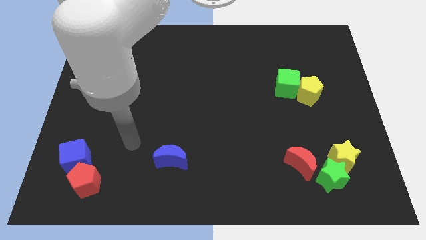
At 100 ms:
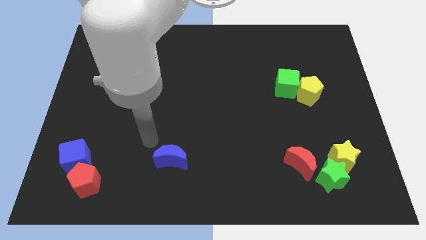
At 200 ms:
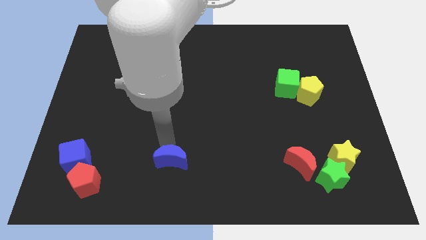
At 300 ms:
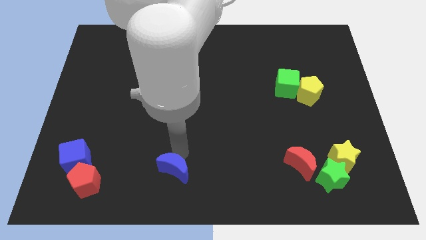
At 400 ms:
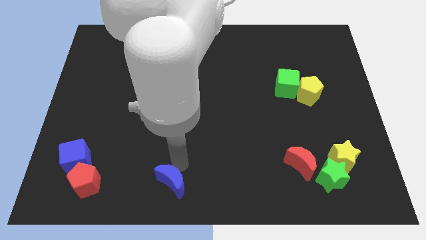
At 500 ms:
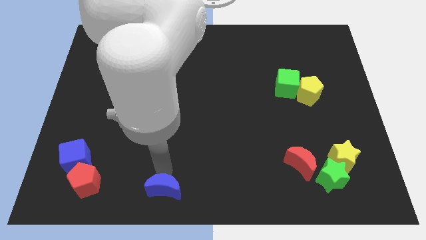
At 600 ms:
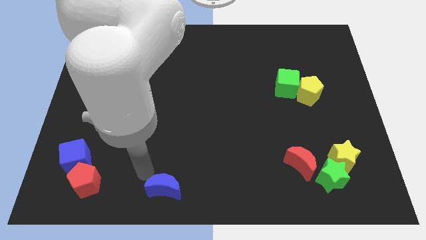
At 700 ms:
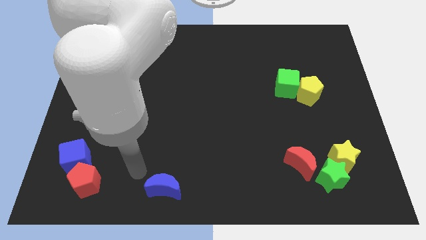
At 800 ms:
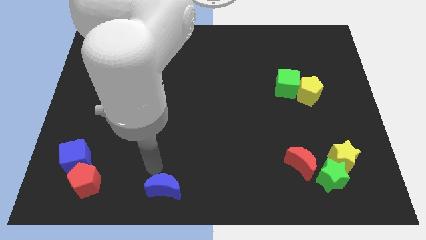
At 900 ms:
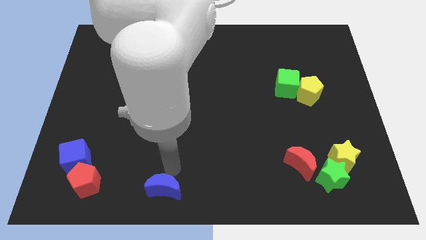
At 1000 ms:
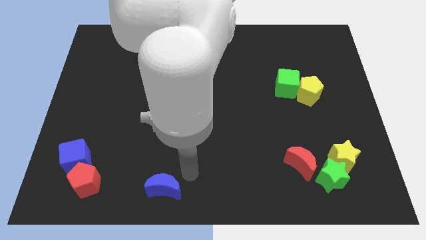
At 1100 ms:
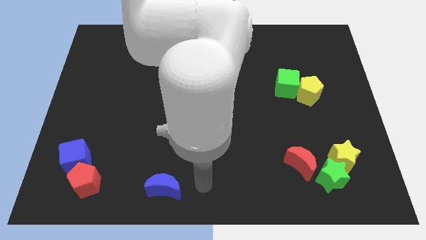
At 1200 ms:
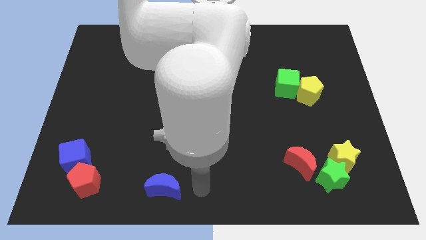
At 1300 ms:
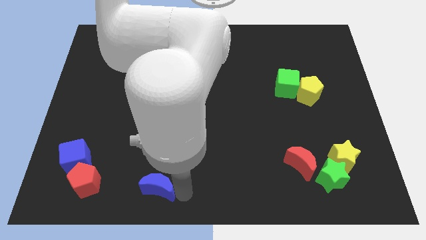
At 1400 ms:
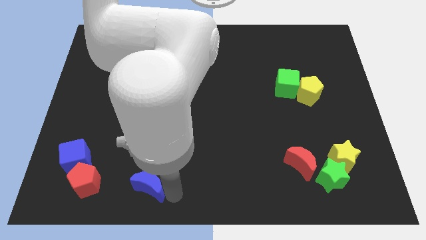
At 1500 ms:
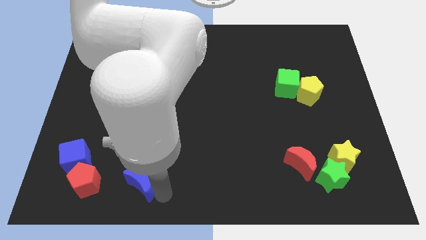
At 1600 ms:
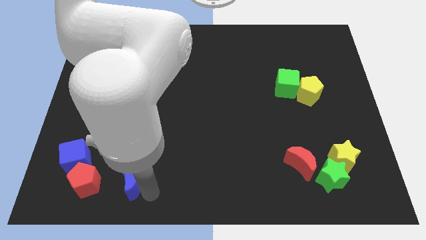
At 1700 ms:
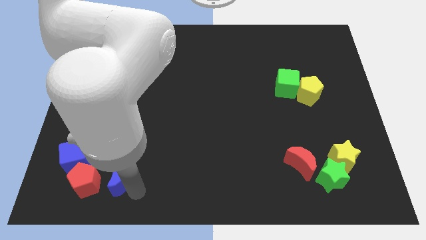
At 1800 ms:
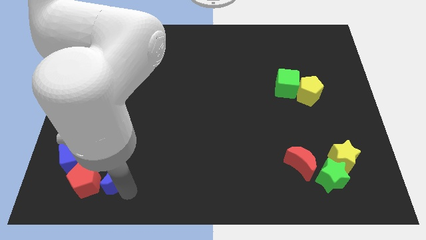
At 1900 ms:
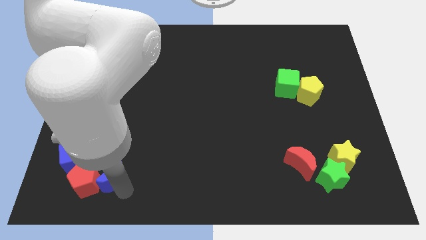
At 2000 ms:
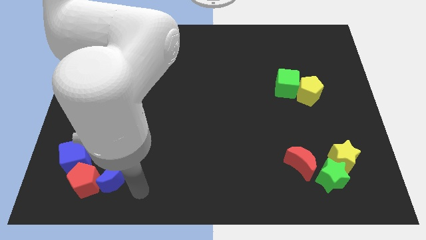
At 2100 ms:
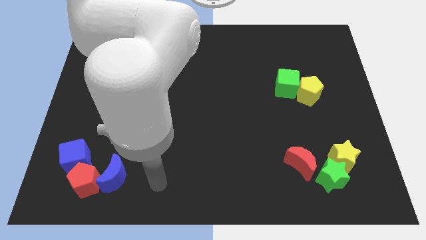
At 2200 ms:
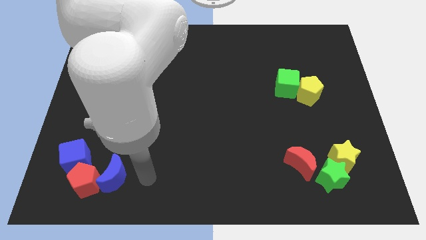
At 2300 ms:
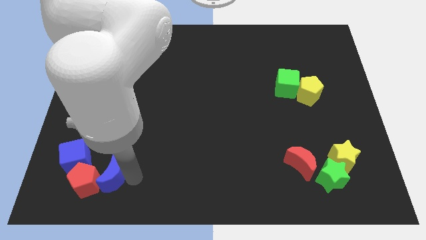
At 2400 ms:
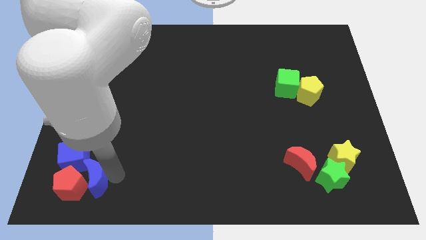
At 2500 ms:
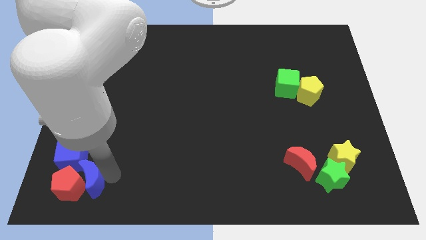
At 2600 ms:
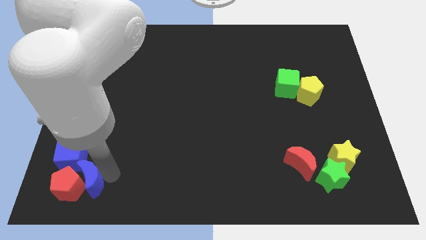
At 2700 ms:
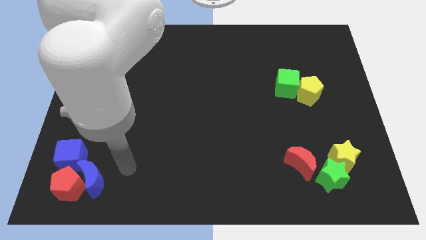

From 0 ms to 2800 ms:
push the blue moon to the right of red pentagon

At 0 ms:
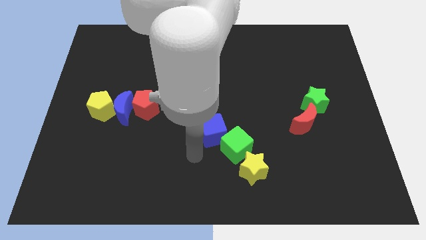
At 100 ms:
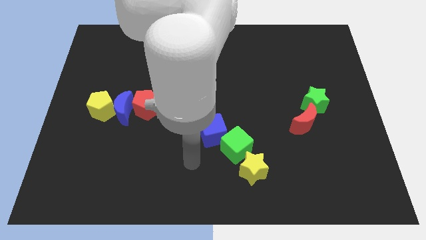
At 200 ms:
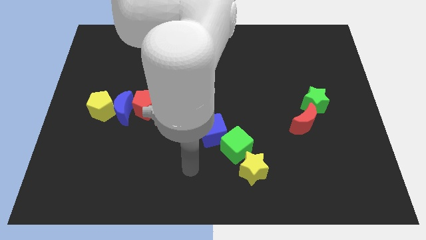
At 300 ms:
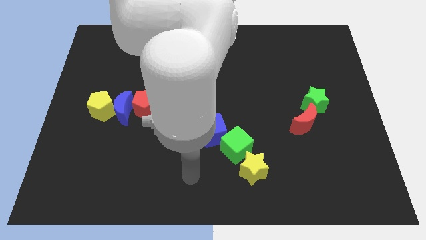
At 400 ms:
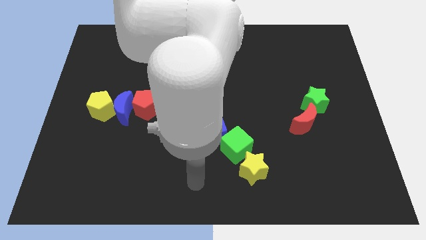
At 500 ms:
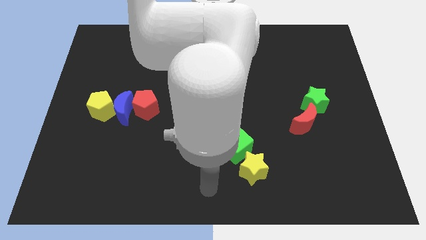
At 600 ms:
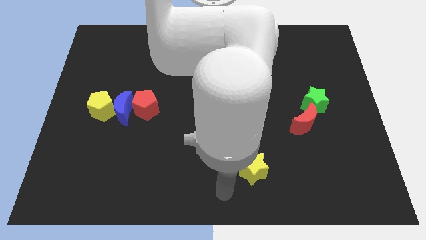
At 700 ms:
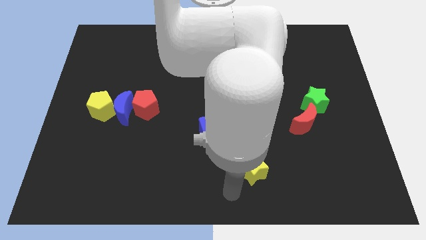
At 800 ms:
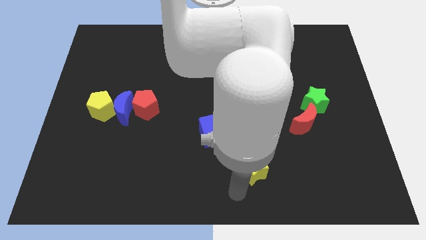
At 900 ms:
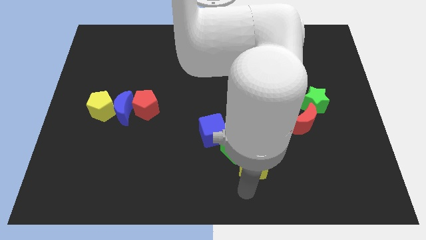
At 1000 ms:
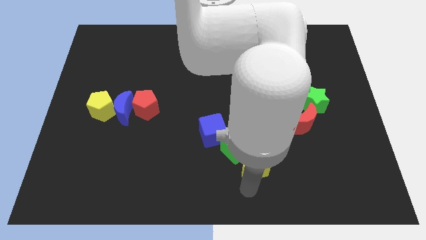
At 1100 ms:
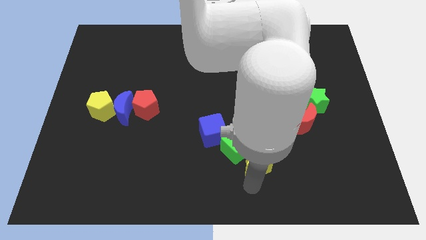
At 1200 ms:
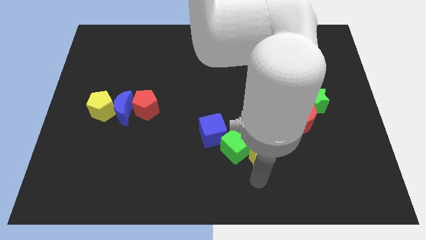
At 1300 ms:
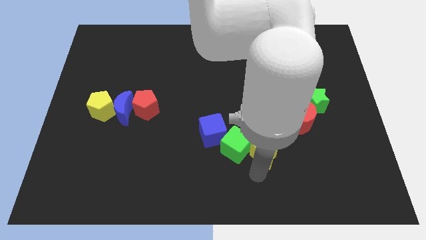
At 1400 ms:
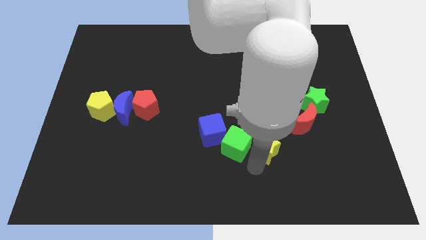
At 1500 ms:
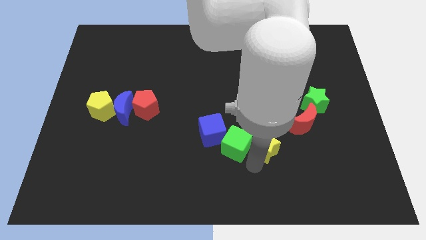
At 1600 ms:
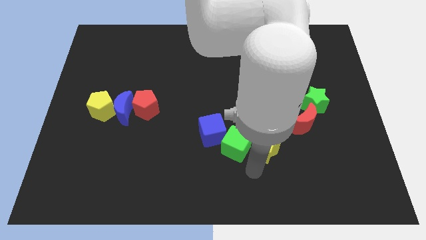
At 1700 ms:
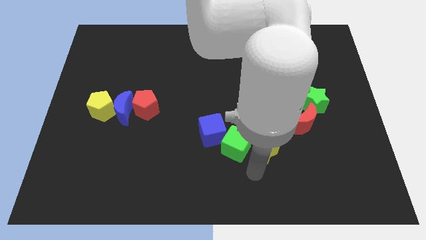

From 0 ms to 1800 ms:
place the yellow star to the right side of green cube

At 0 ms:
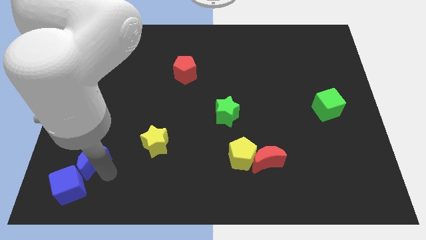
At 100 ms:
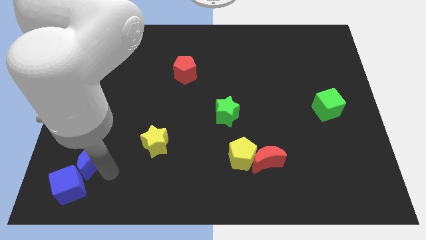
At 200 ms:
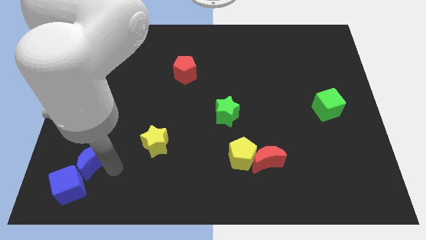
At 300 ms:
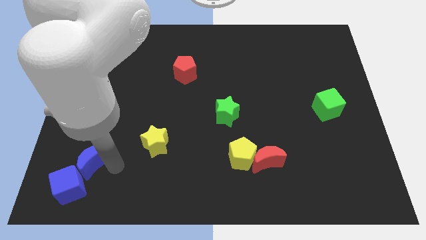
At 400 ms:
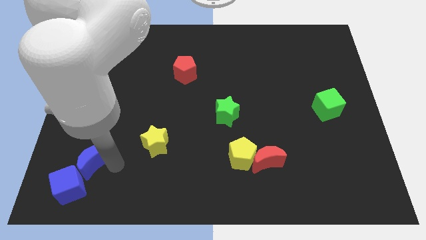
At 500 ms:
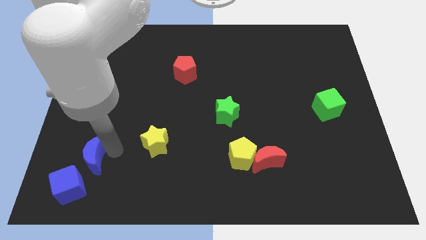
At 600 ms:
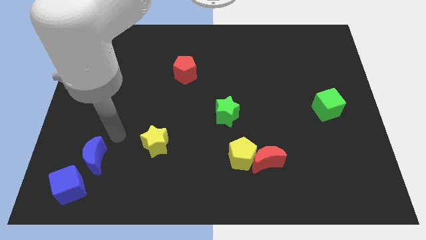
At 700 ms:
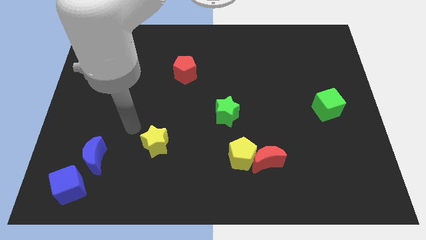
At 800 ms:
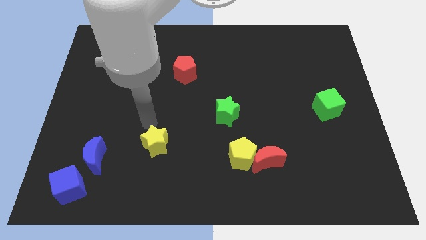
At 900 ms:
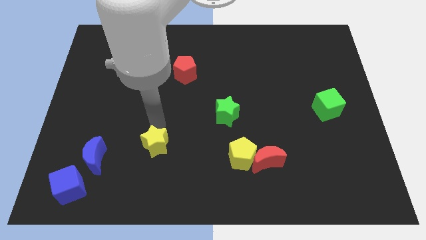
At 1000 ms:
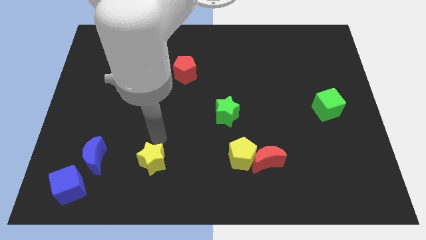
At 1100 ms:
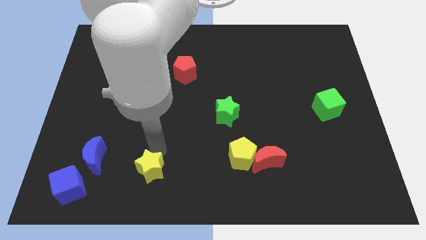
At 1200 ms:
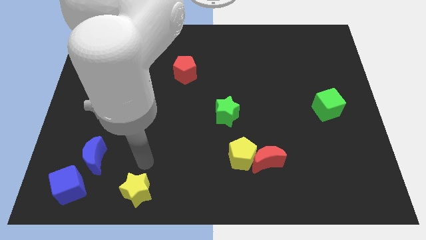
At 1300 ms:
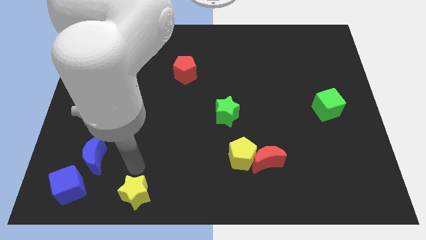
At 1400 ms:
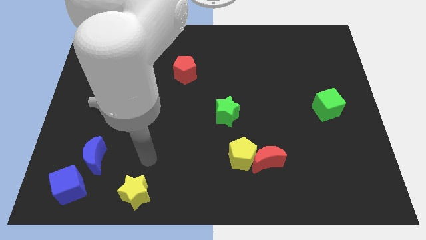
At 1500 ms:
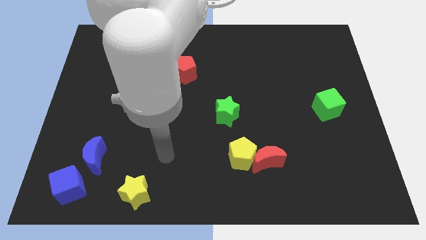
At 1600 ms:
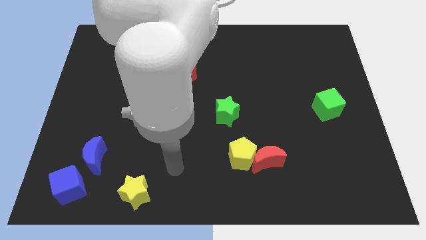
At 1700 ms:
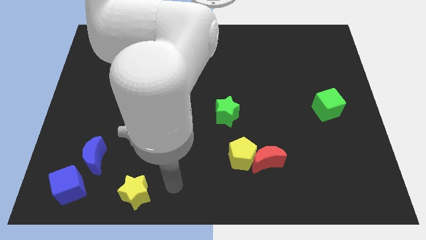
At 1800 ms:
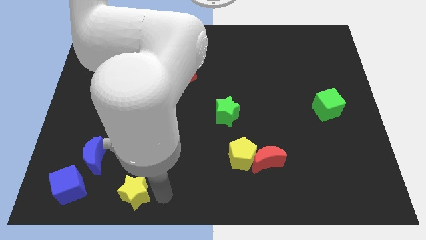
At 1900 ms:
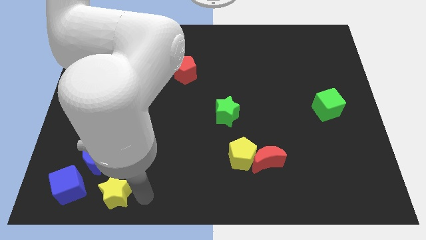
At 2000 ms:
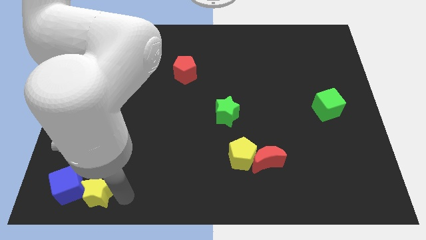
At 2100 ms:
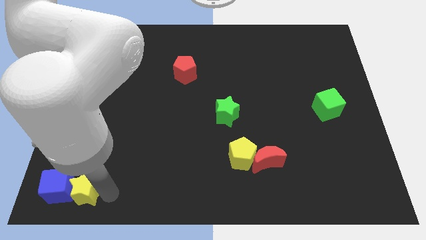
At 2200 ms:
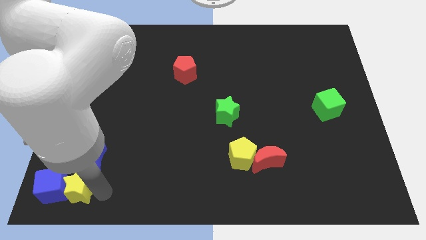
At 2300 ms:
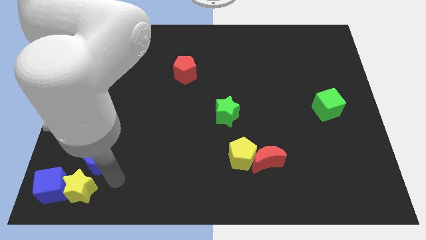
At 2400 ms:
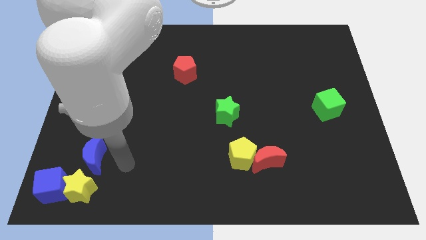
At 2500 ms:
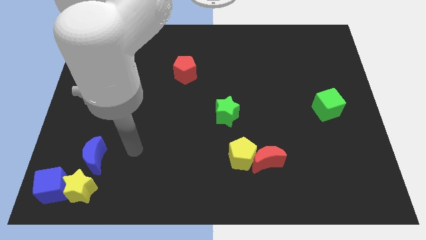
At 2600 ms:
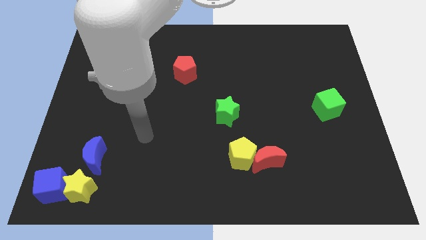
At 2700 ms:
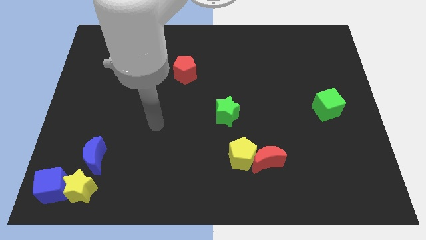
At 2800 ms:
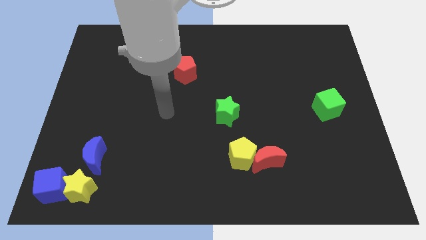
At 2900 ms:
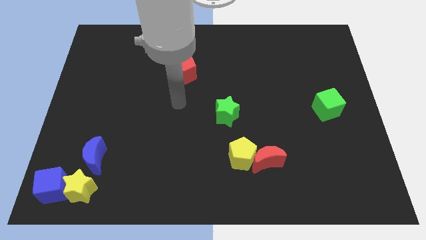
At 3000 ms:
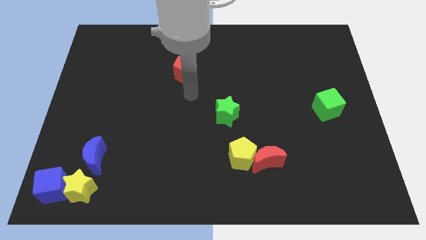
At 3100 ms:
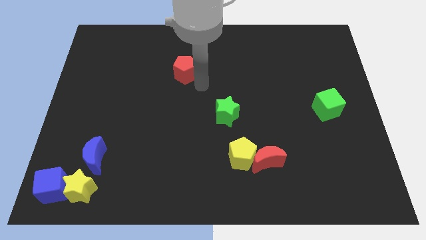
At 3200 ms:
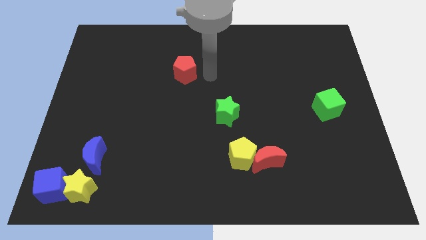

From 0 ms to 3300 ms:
push the yellow star into the right of the blue cube

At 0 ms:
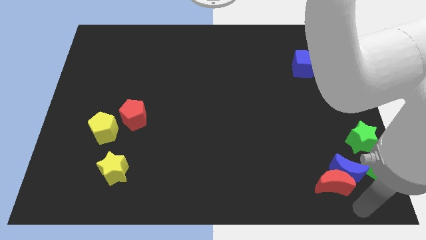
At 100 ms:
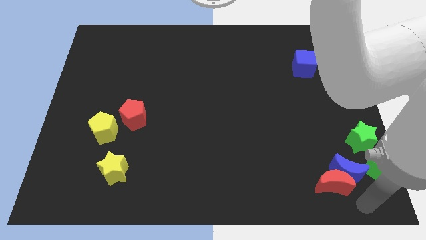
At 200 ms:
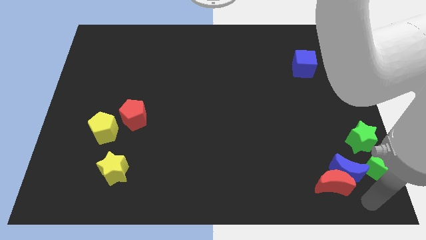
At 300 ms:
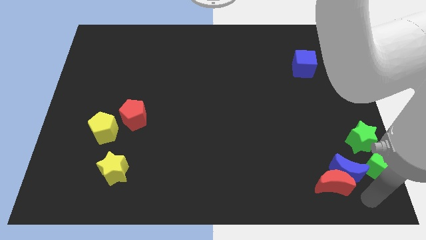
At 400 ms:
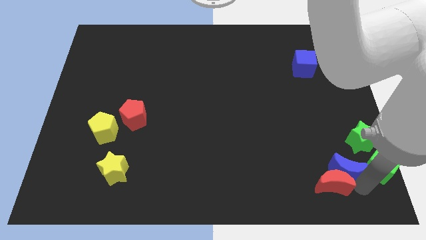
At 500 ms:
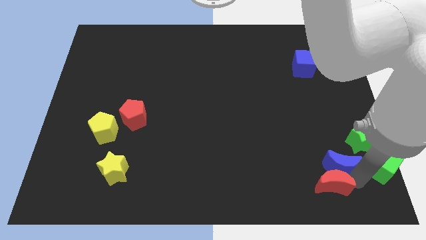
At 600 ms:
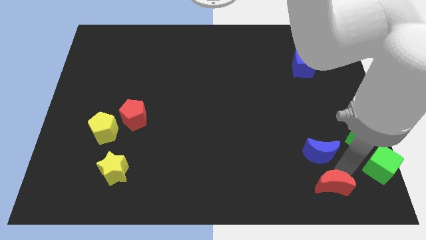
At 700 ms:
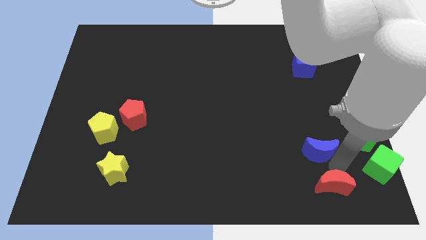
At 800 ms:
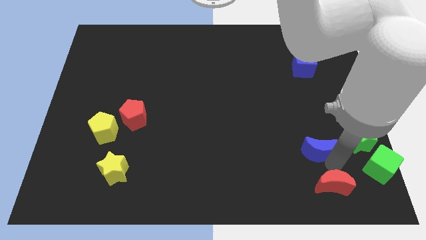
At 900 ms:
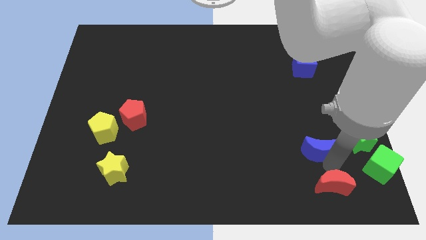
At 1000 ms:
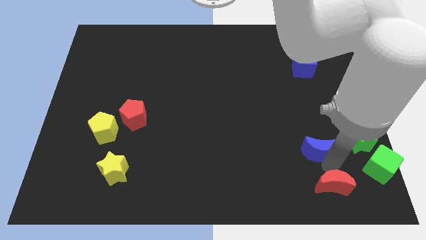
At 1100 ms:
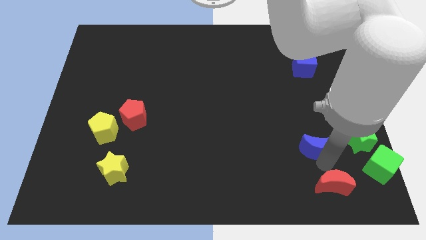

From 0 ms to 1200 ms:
separate the blue crescent from the red crescent
